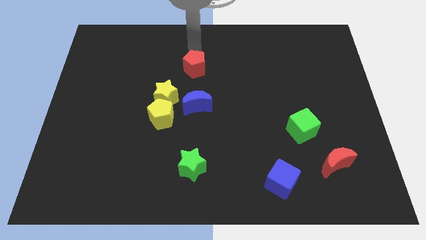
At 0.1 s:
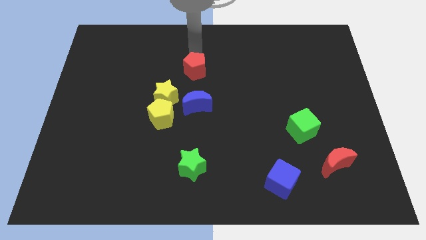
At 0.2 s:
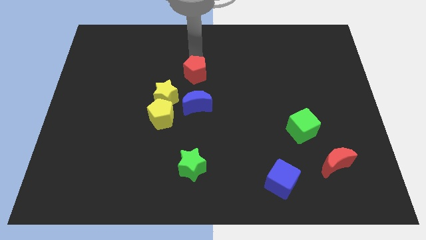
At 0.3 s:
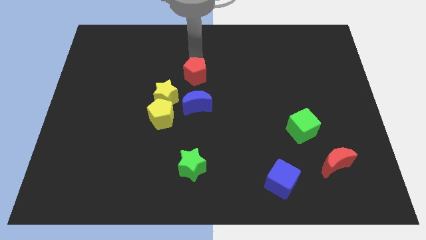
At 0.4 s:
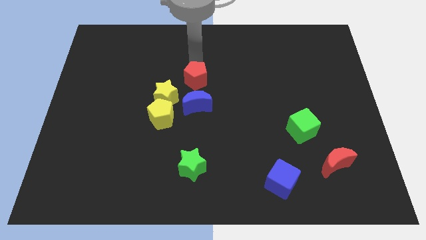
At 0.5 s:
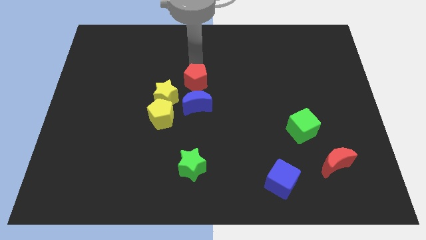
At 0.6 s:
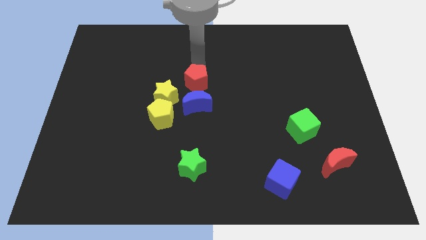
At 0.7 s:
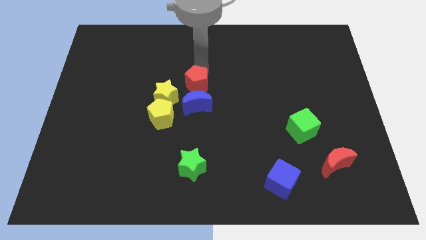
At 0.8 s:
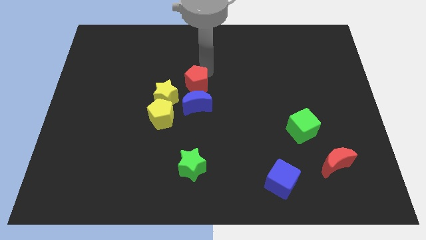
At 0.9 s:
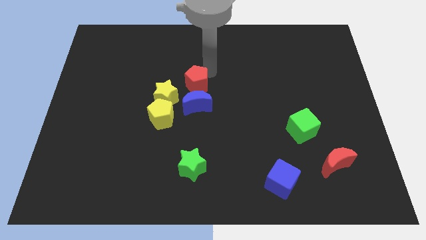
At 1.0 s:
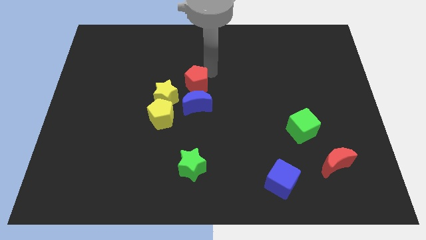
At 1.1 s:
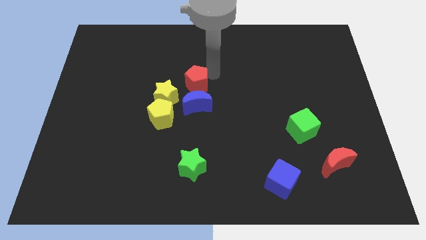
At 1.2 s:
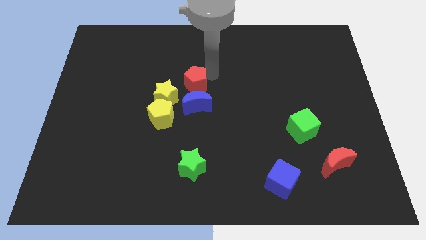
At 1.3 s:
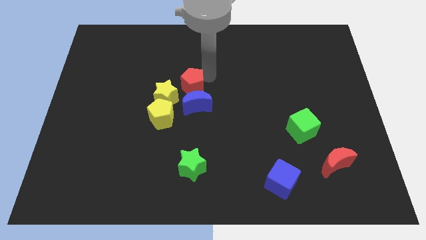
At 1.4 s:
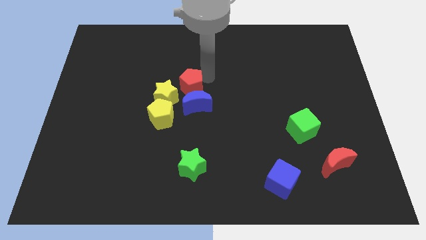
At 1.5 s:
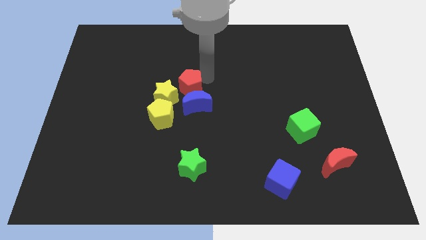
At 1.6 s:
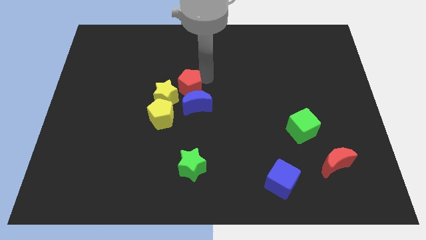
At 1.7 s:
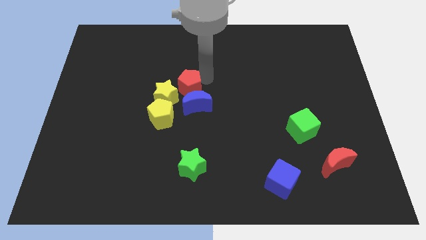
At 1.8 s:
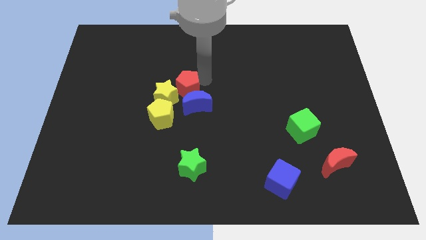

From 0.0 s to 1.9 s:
move the red pentagon above the blue crescent

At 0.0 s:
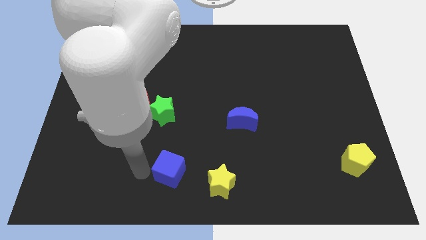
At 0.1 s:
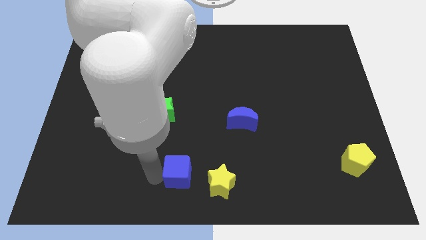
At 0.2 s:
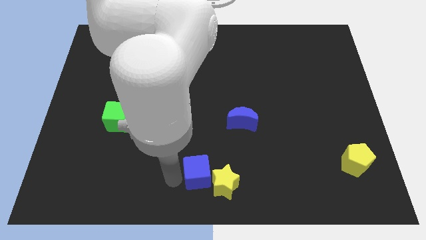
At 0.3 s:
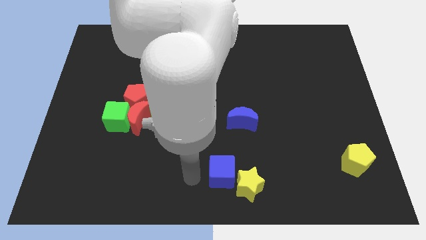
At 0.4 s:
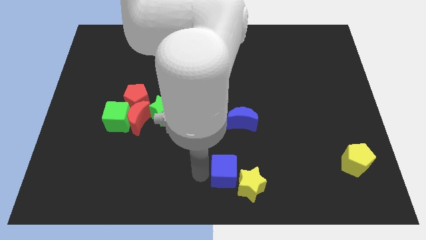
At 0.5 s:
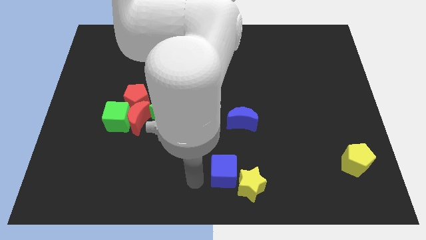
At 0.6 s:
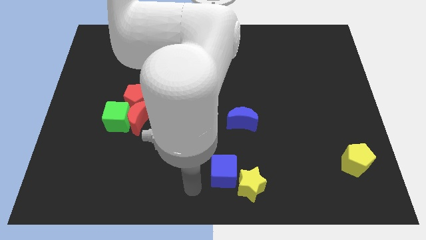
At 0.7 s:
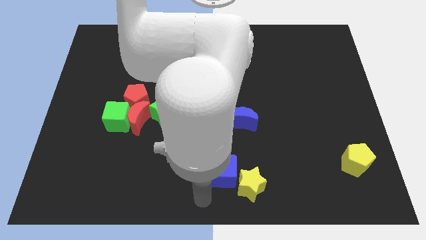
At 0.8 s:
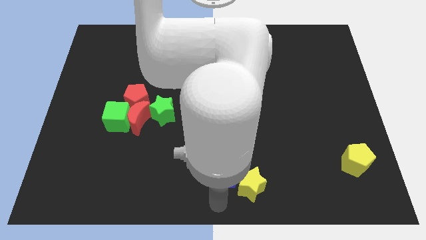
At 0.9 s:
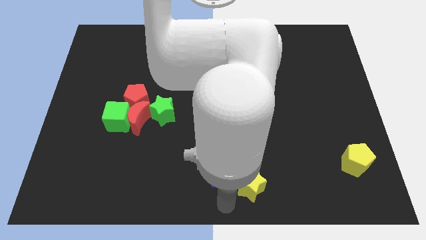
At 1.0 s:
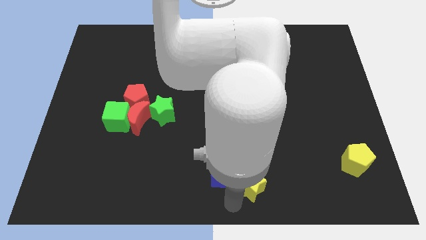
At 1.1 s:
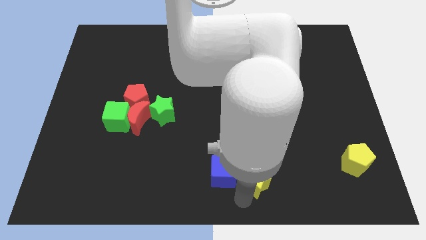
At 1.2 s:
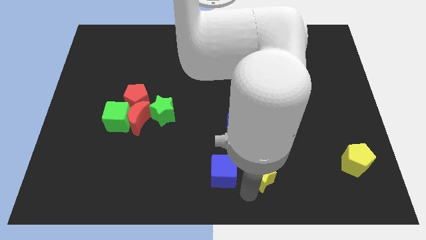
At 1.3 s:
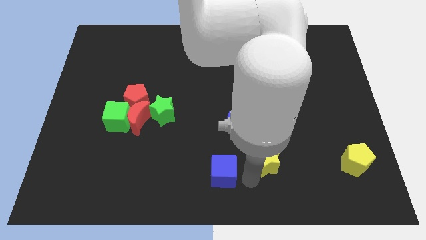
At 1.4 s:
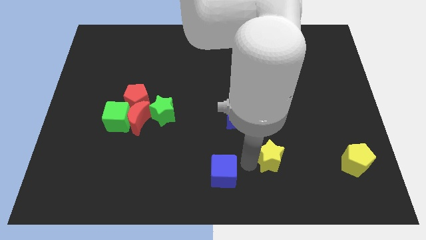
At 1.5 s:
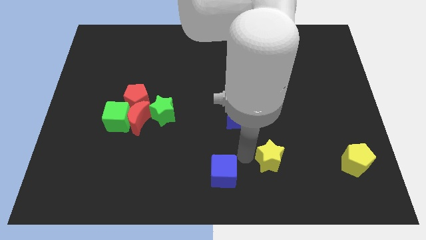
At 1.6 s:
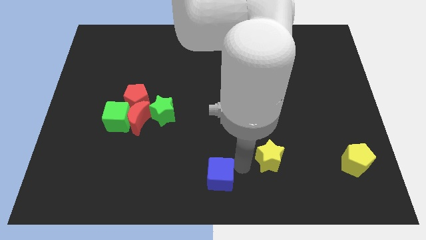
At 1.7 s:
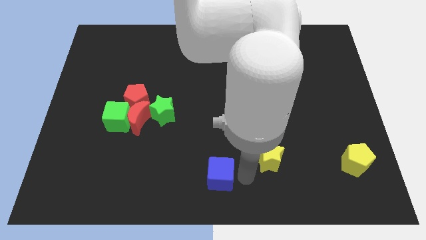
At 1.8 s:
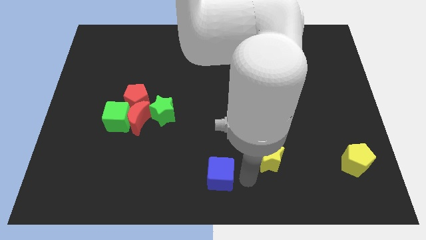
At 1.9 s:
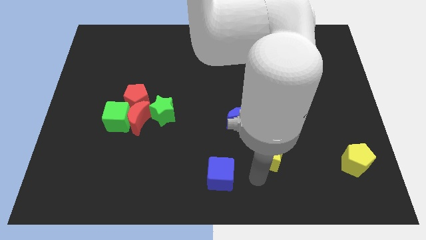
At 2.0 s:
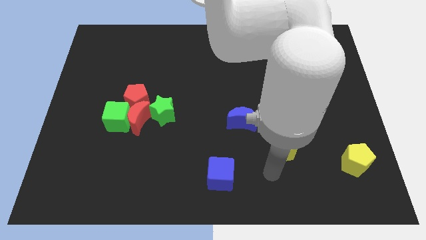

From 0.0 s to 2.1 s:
separate yellow star from blue cube

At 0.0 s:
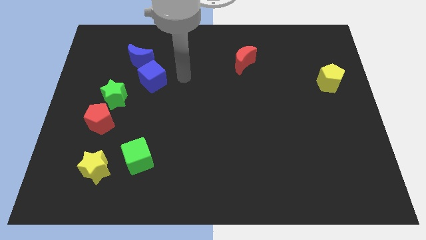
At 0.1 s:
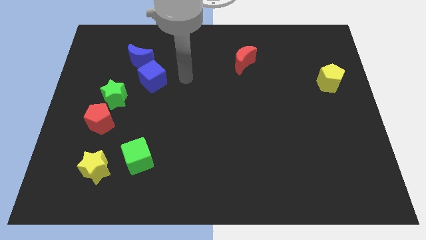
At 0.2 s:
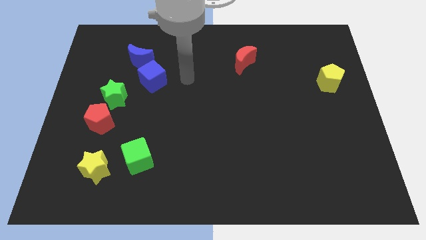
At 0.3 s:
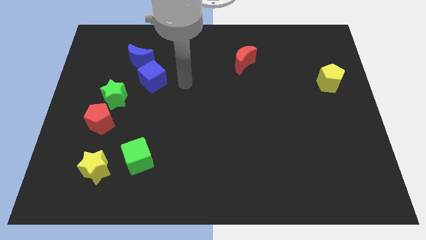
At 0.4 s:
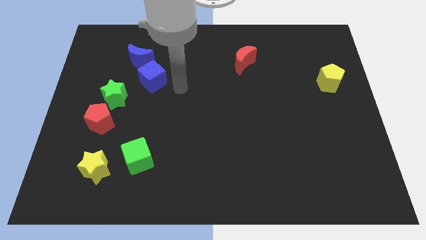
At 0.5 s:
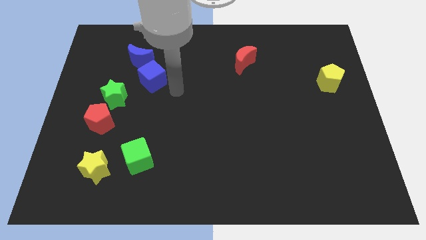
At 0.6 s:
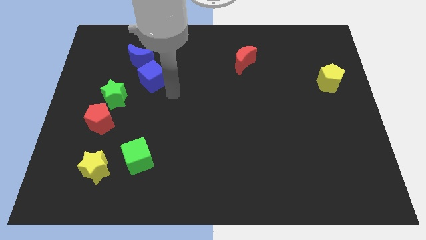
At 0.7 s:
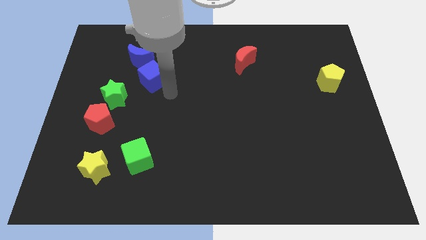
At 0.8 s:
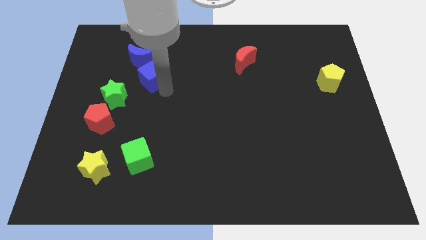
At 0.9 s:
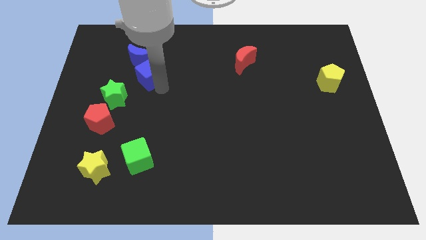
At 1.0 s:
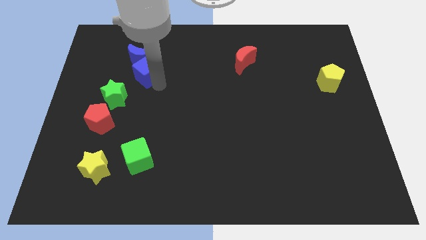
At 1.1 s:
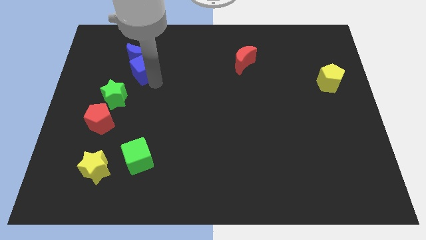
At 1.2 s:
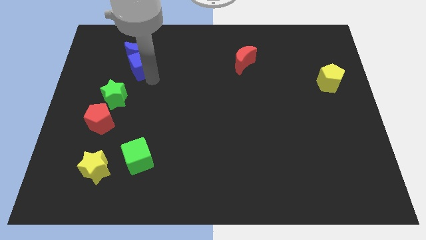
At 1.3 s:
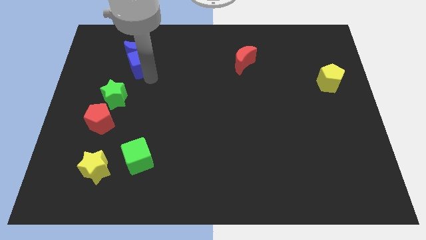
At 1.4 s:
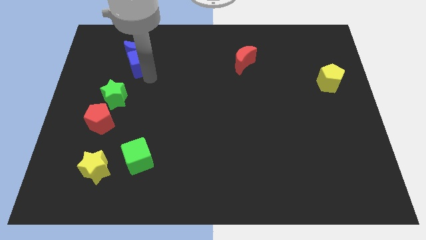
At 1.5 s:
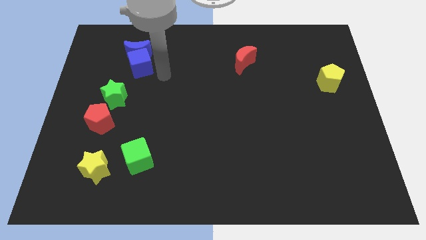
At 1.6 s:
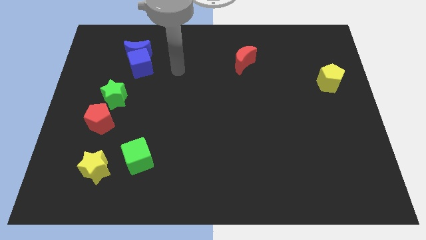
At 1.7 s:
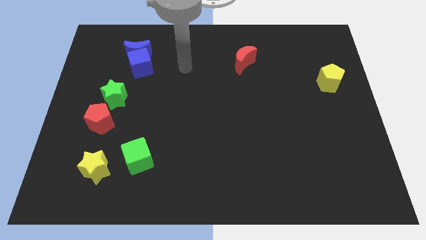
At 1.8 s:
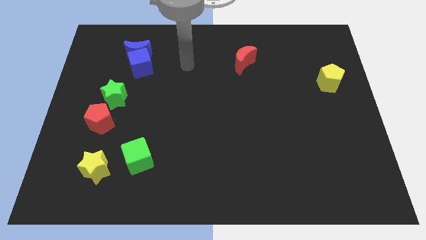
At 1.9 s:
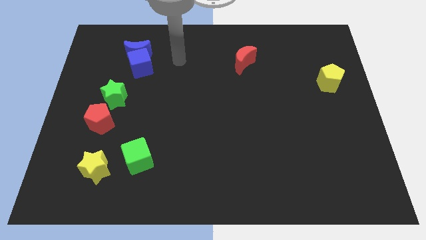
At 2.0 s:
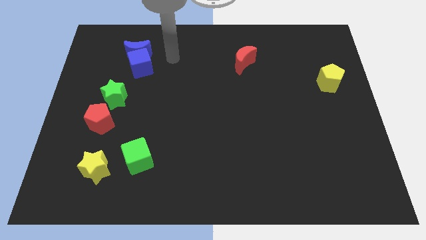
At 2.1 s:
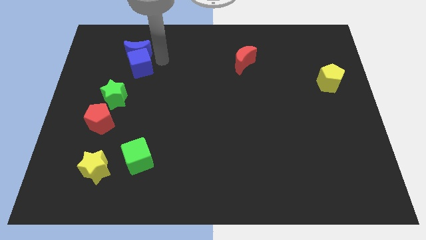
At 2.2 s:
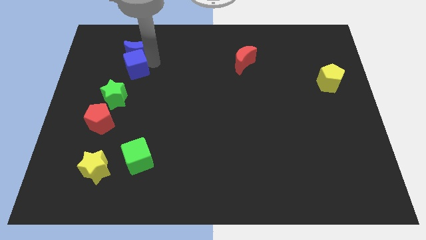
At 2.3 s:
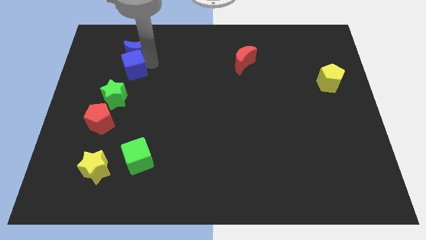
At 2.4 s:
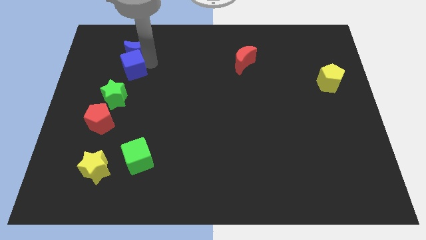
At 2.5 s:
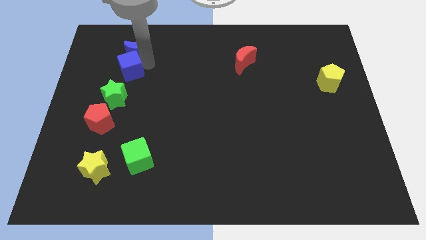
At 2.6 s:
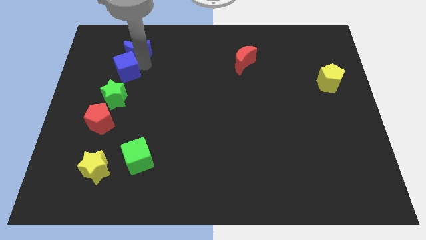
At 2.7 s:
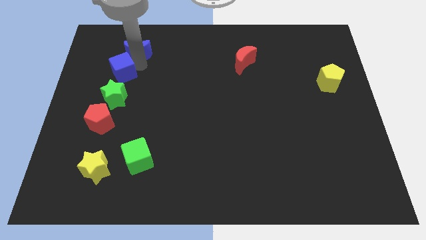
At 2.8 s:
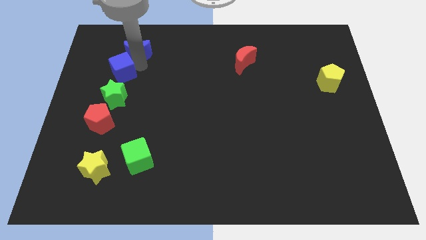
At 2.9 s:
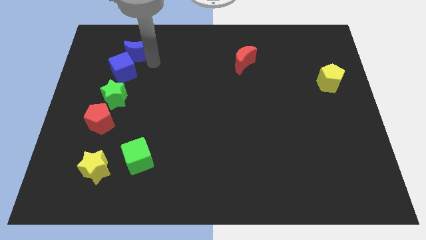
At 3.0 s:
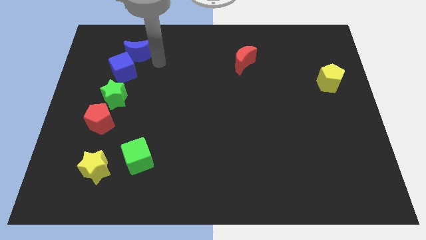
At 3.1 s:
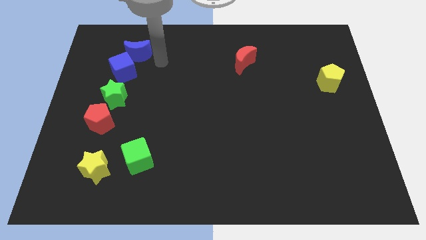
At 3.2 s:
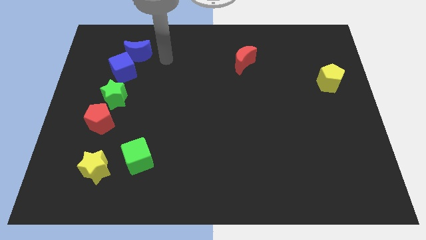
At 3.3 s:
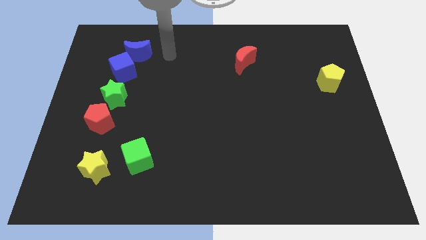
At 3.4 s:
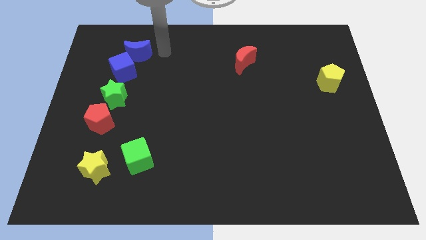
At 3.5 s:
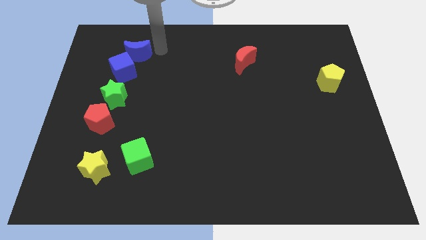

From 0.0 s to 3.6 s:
move the blue cube vertically to the top of the green cube

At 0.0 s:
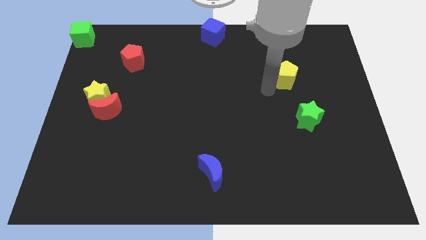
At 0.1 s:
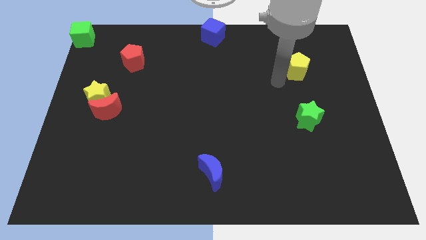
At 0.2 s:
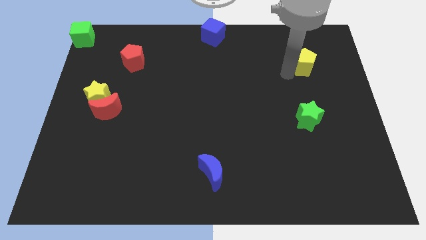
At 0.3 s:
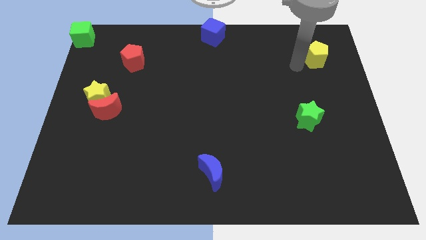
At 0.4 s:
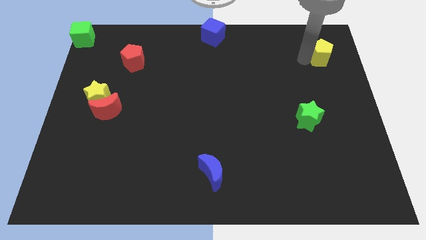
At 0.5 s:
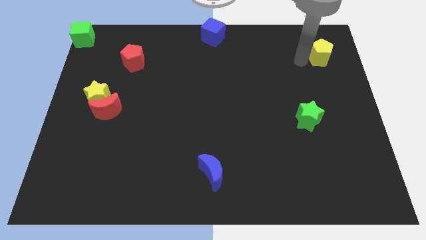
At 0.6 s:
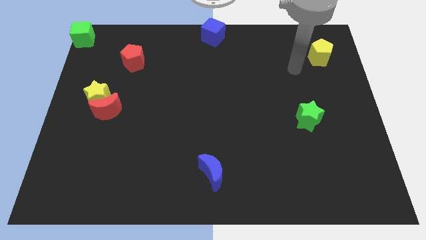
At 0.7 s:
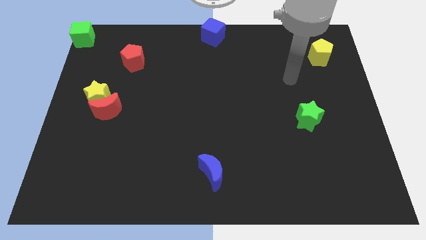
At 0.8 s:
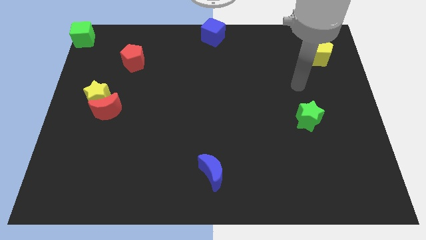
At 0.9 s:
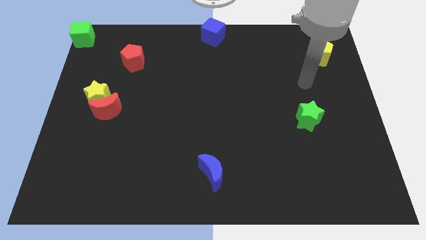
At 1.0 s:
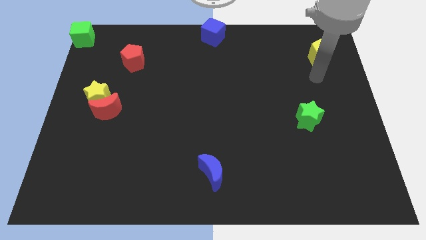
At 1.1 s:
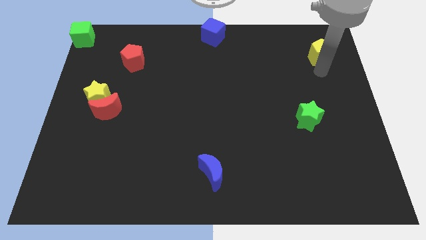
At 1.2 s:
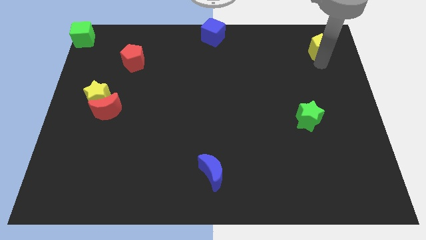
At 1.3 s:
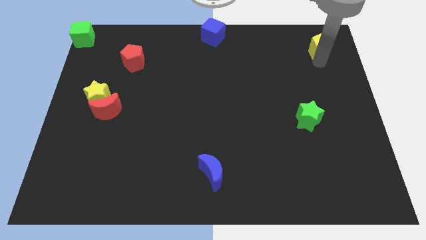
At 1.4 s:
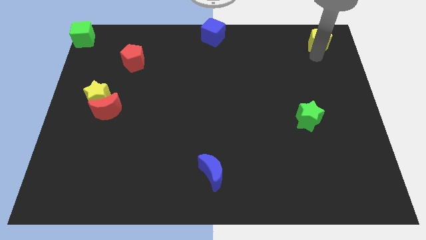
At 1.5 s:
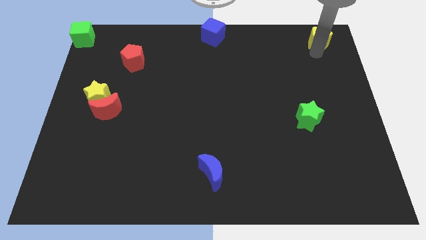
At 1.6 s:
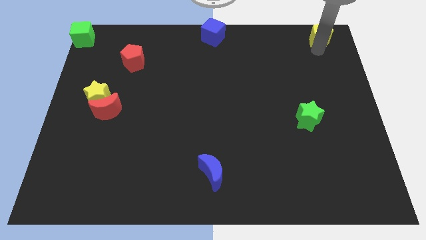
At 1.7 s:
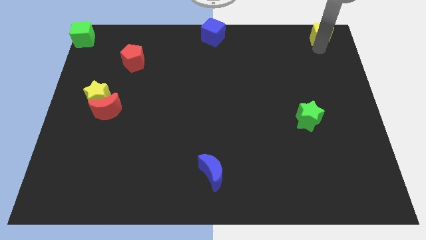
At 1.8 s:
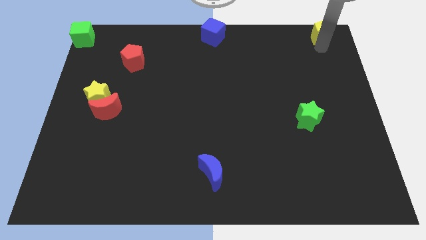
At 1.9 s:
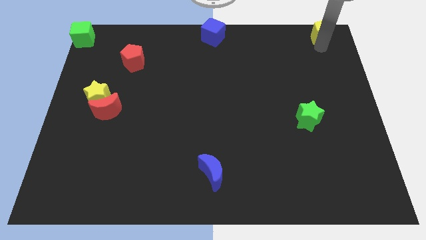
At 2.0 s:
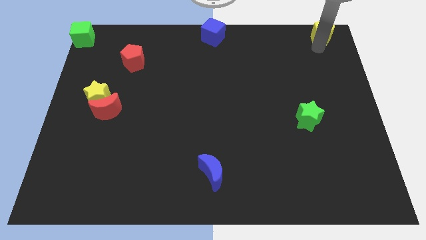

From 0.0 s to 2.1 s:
push the yellow pentagon to the top right corner
